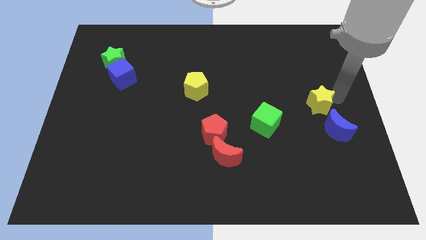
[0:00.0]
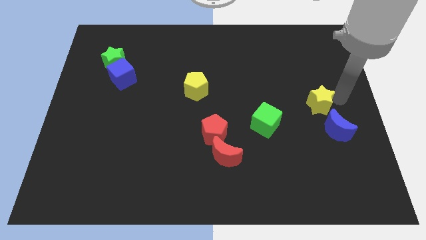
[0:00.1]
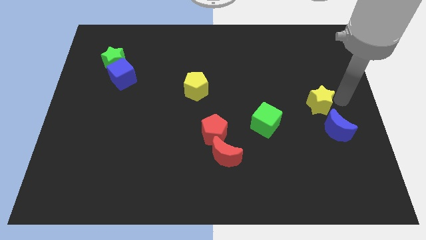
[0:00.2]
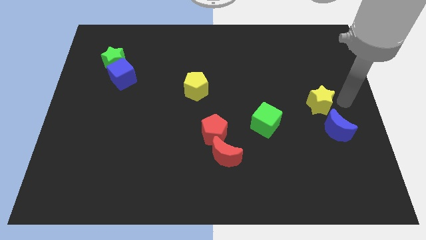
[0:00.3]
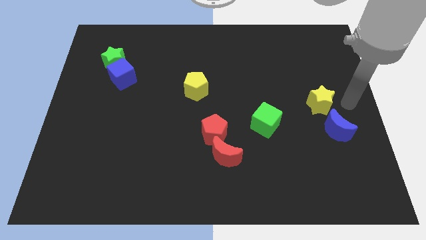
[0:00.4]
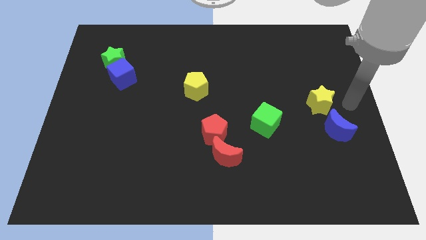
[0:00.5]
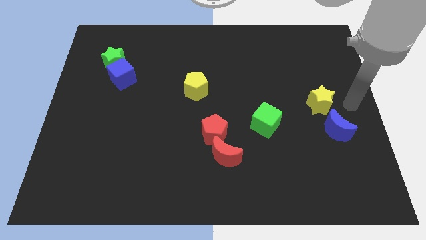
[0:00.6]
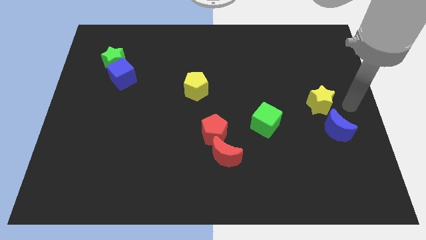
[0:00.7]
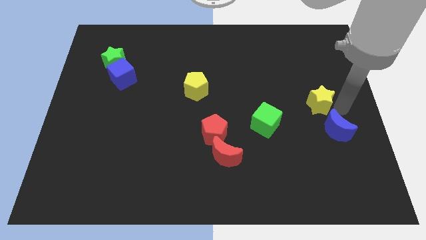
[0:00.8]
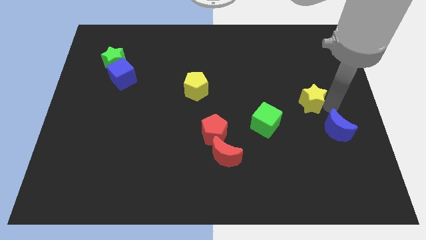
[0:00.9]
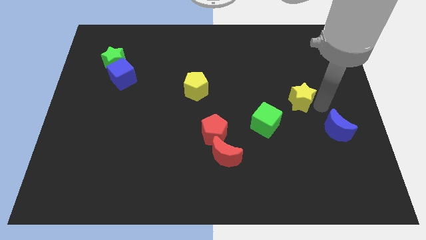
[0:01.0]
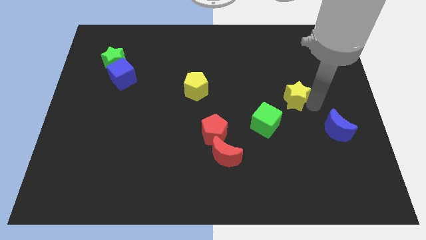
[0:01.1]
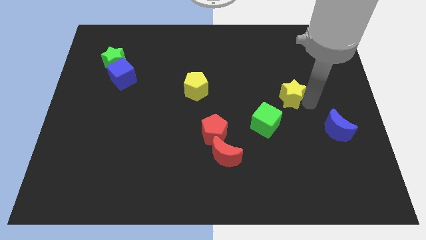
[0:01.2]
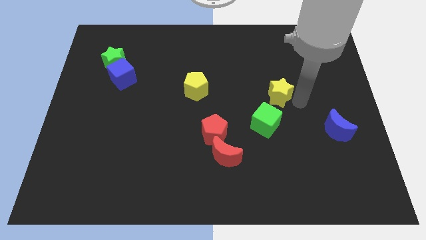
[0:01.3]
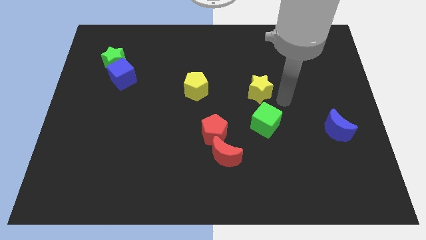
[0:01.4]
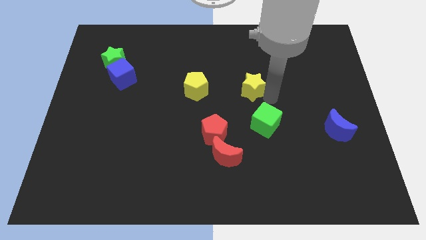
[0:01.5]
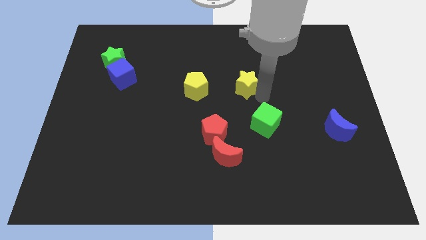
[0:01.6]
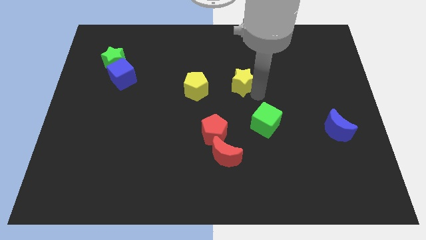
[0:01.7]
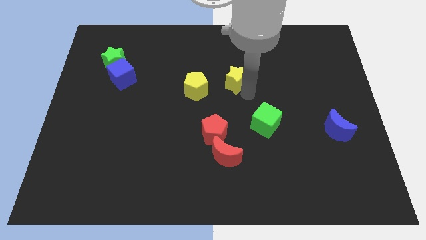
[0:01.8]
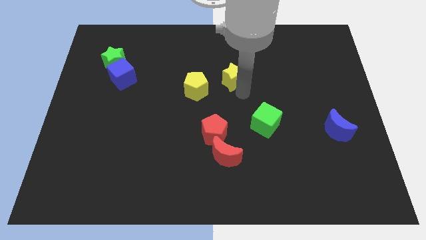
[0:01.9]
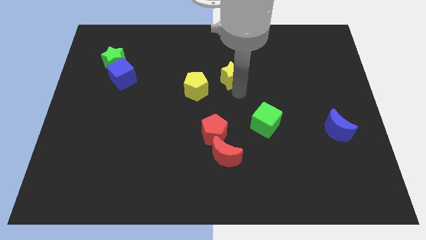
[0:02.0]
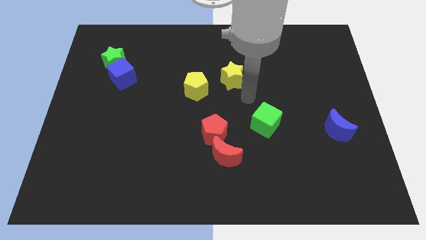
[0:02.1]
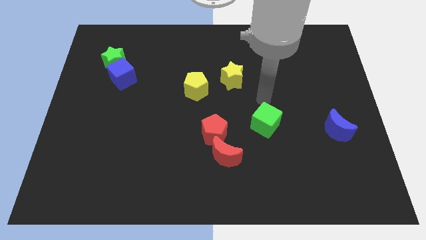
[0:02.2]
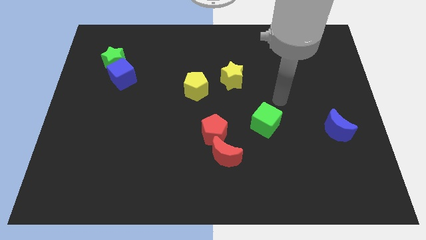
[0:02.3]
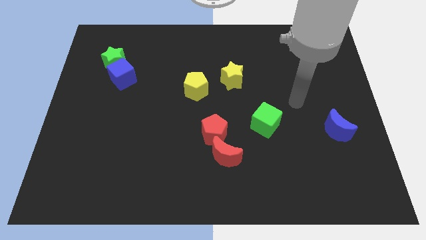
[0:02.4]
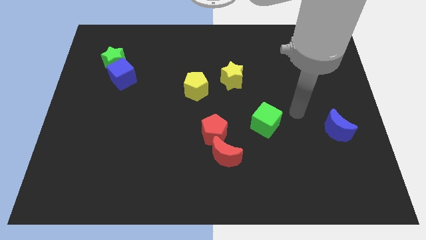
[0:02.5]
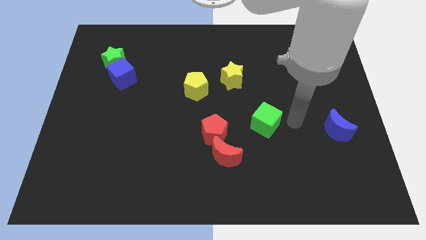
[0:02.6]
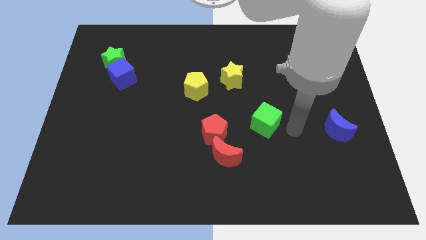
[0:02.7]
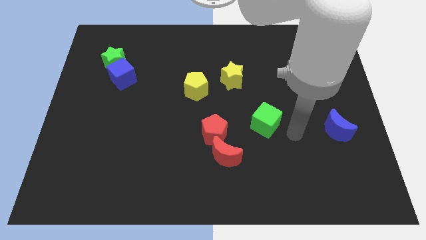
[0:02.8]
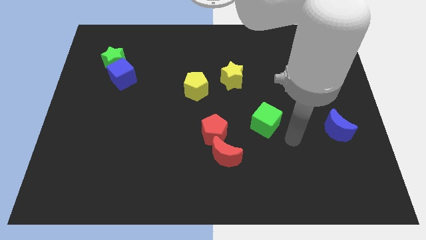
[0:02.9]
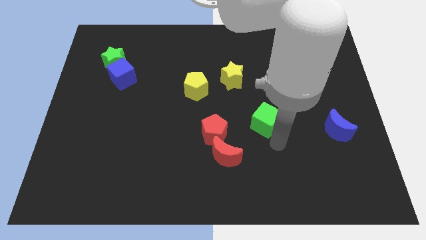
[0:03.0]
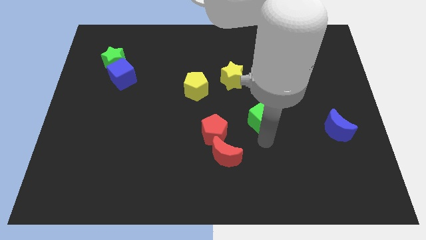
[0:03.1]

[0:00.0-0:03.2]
push the yellow star to the right of the yellow pentagon

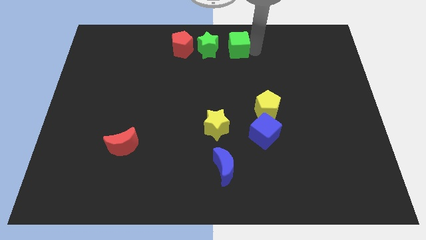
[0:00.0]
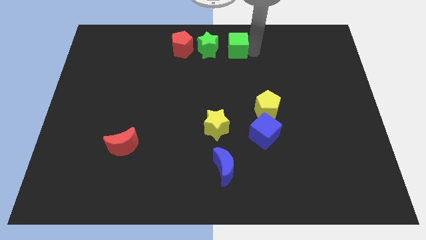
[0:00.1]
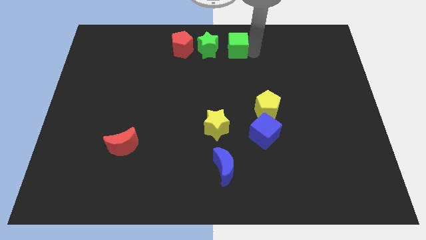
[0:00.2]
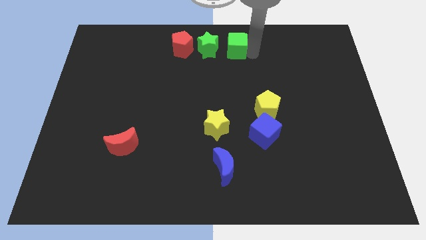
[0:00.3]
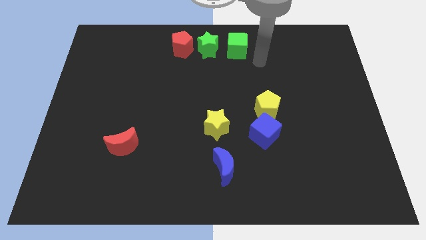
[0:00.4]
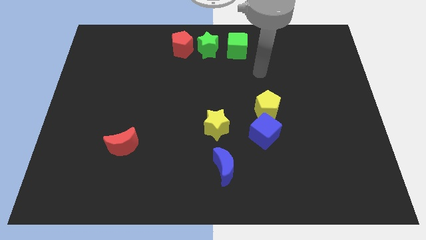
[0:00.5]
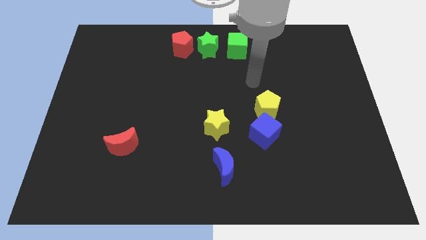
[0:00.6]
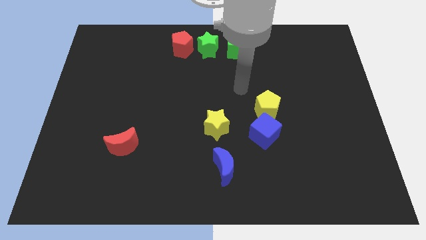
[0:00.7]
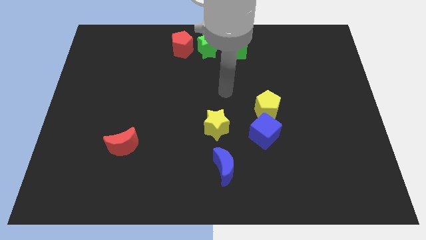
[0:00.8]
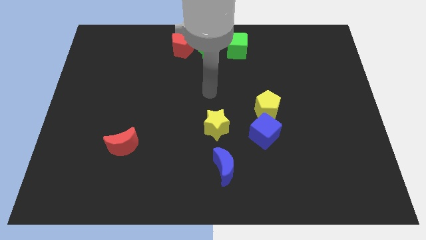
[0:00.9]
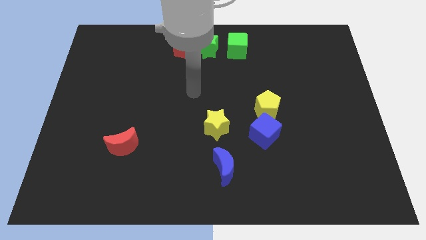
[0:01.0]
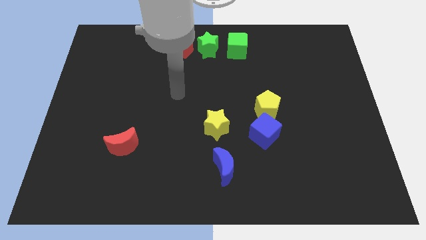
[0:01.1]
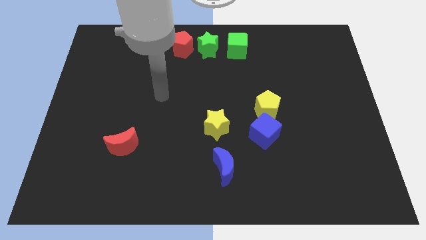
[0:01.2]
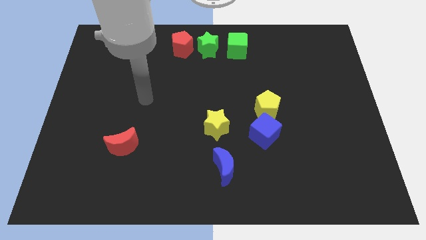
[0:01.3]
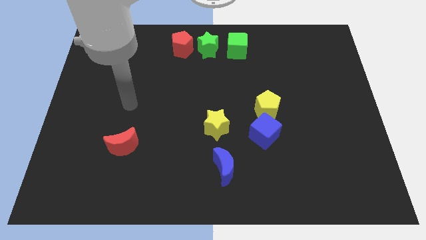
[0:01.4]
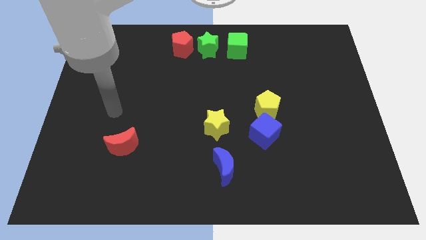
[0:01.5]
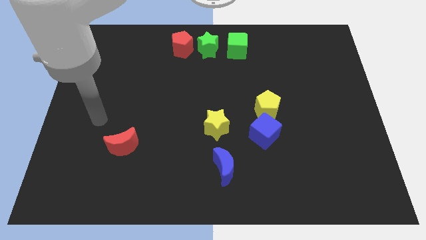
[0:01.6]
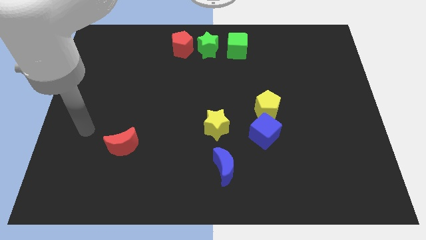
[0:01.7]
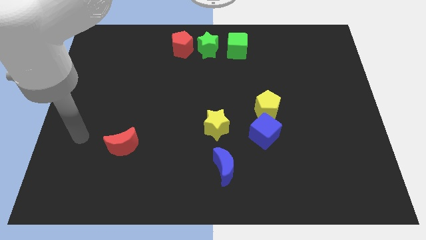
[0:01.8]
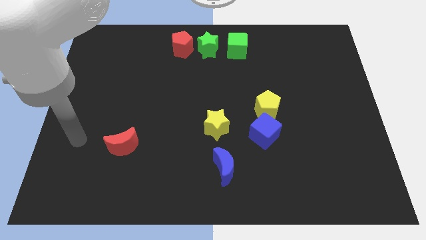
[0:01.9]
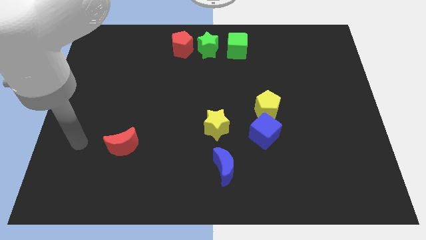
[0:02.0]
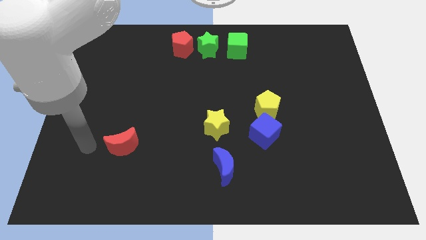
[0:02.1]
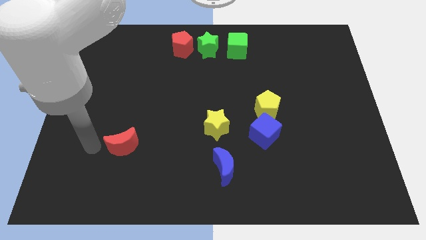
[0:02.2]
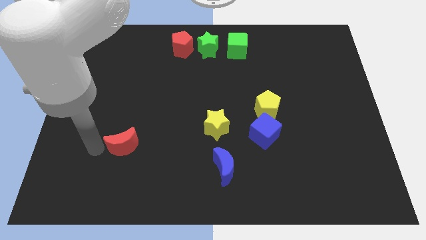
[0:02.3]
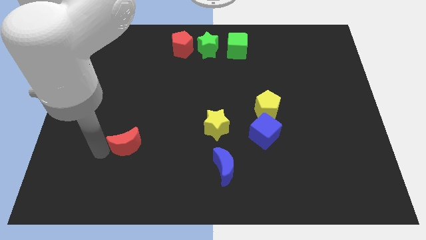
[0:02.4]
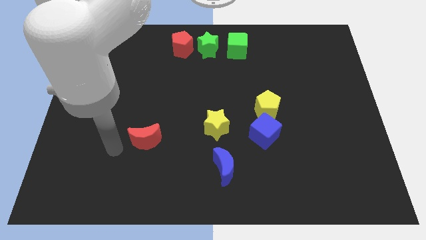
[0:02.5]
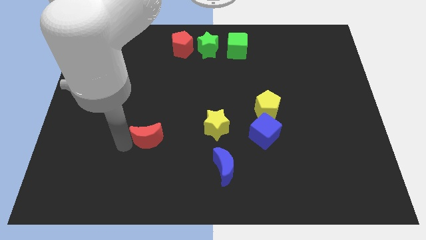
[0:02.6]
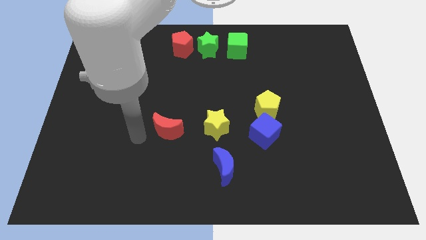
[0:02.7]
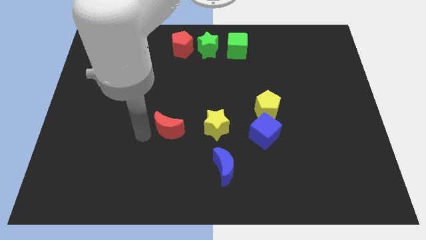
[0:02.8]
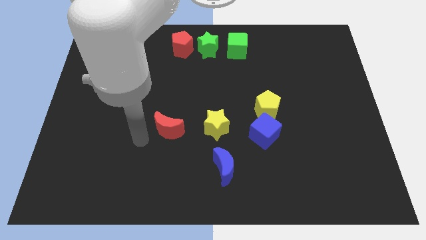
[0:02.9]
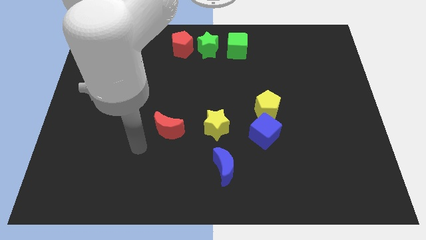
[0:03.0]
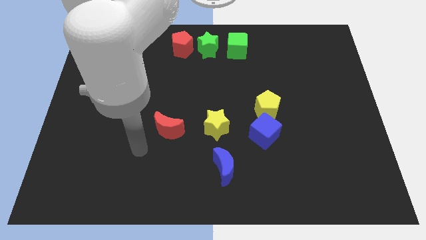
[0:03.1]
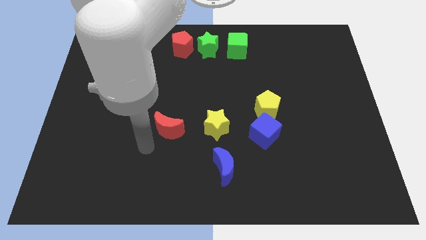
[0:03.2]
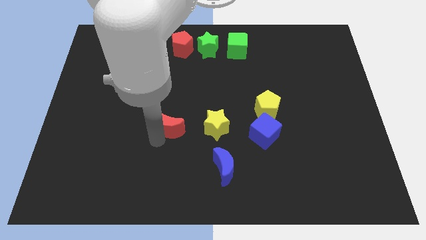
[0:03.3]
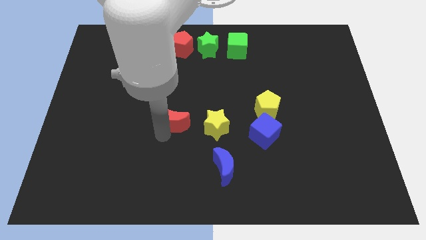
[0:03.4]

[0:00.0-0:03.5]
push the red moon closer to the yellow star

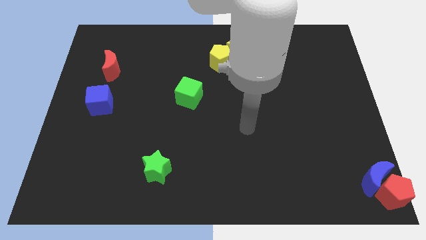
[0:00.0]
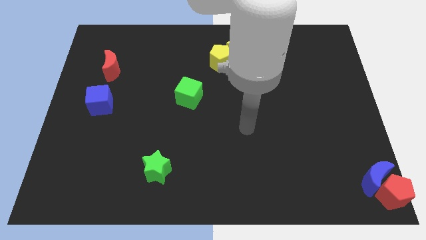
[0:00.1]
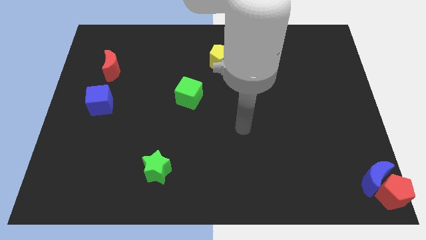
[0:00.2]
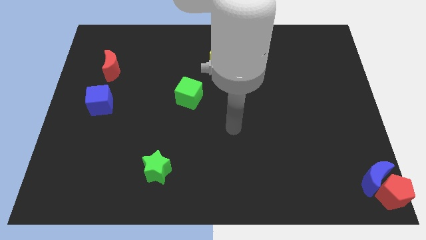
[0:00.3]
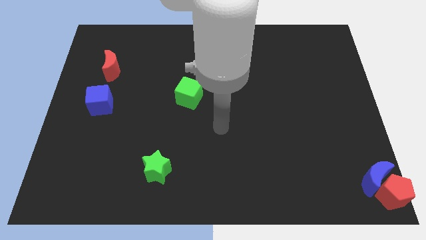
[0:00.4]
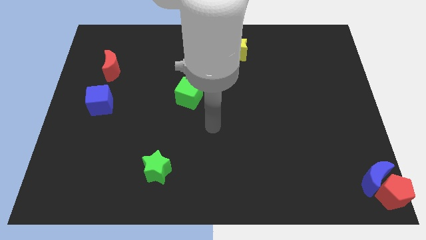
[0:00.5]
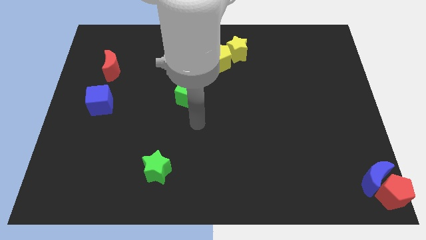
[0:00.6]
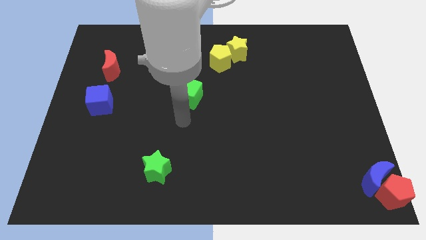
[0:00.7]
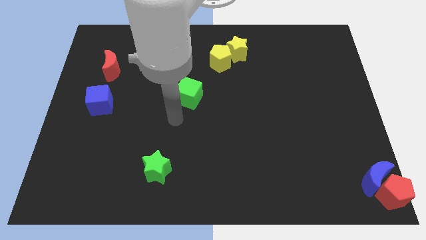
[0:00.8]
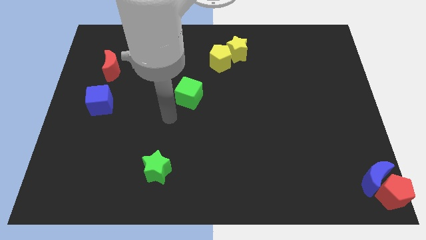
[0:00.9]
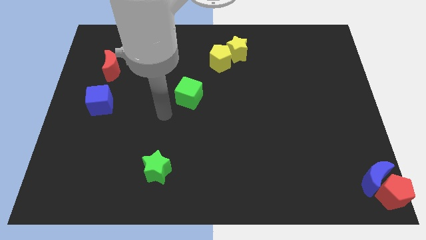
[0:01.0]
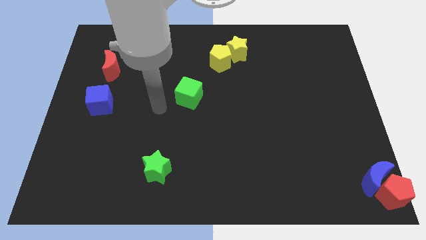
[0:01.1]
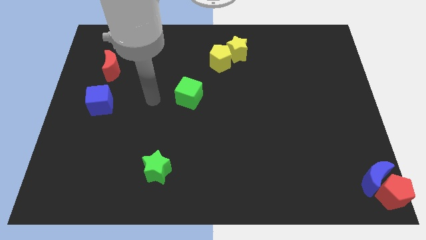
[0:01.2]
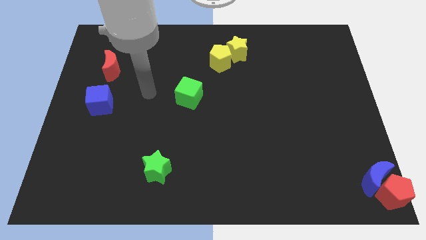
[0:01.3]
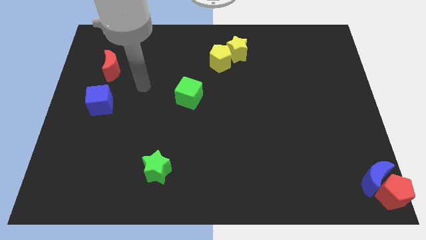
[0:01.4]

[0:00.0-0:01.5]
place the arm in between the green cube and red crescent

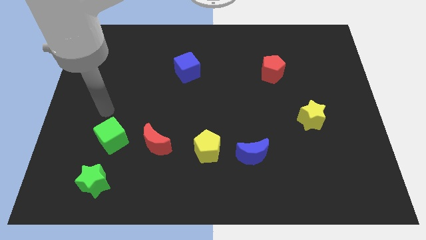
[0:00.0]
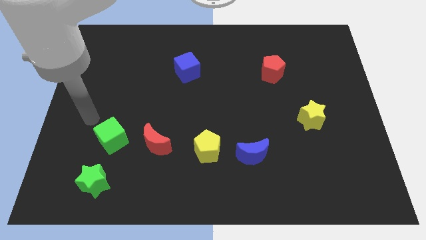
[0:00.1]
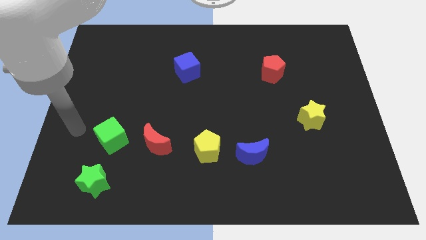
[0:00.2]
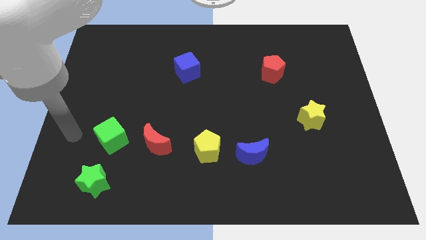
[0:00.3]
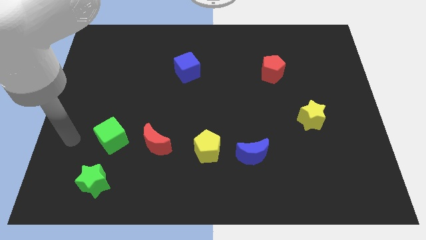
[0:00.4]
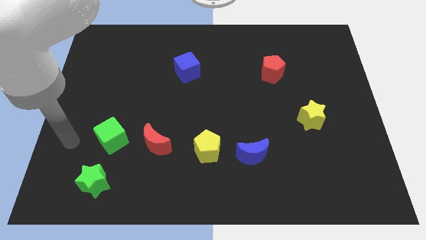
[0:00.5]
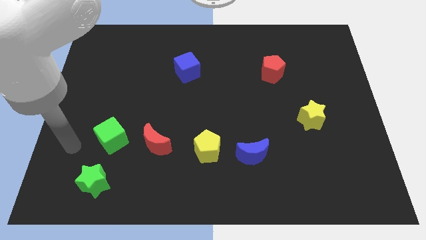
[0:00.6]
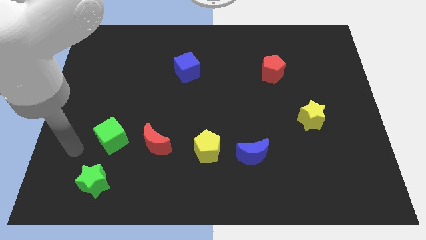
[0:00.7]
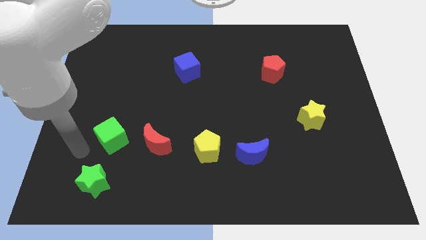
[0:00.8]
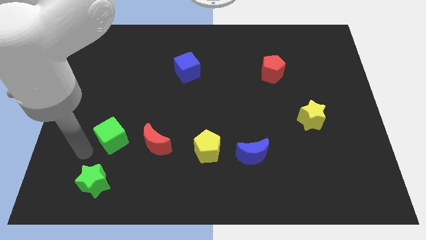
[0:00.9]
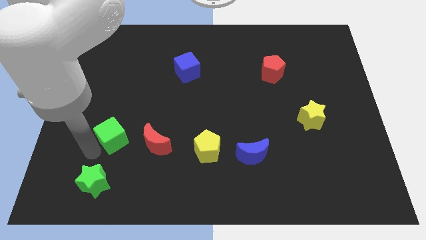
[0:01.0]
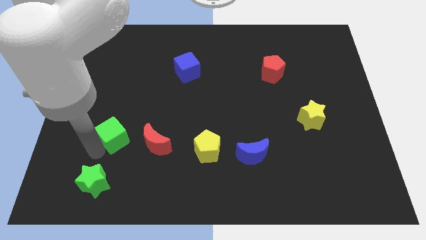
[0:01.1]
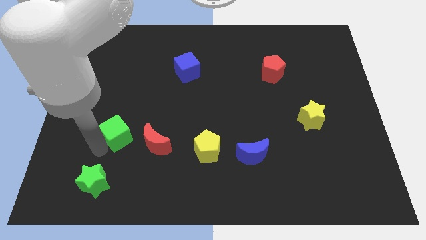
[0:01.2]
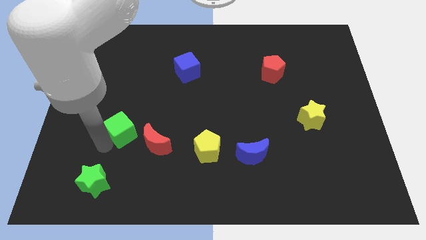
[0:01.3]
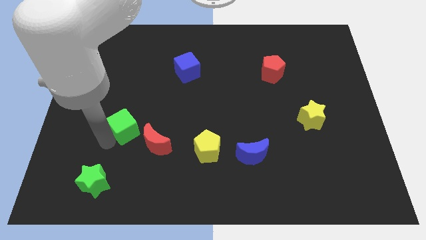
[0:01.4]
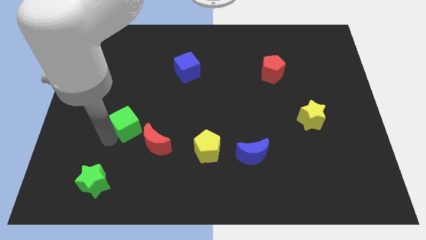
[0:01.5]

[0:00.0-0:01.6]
move green cube left above the red moon
